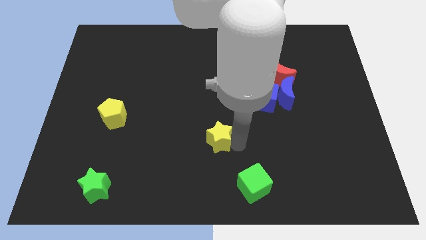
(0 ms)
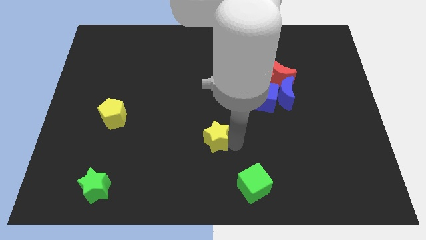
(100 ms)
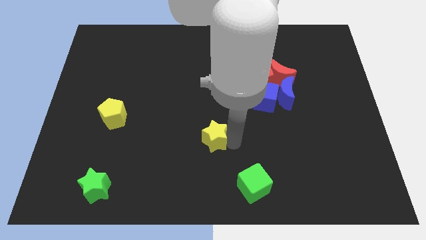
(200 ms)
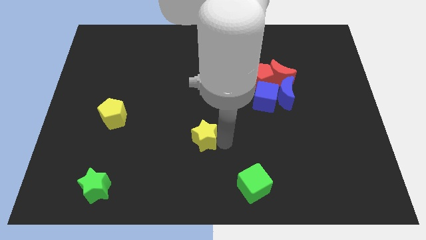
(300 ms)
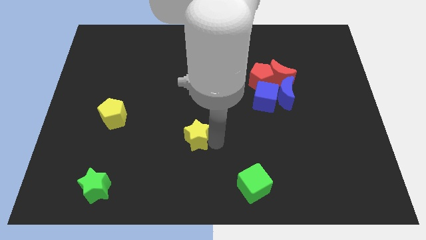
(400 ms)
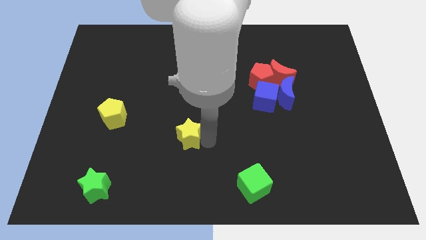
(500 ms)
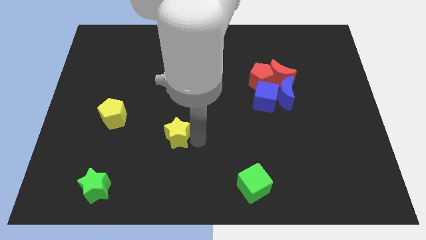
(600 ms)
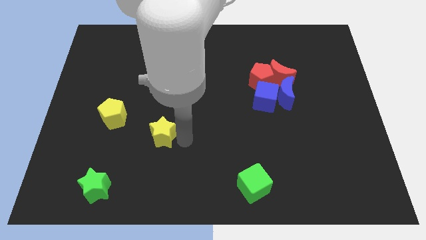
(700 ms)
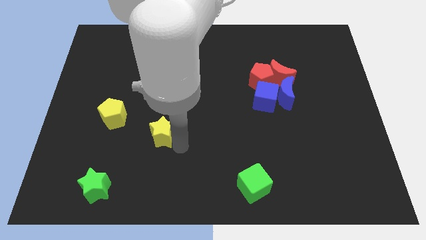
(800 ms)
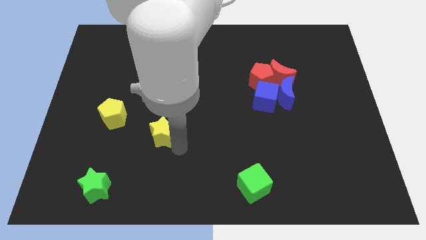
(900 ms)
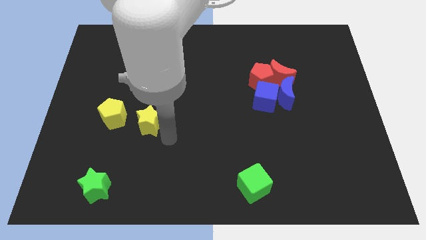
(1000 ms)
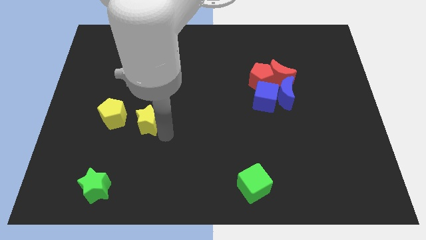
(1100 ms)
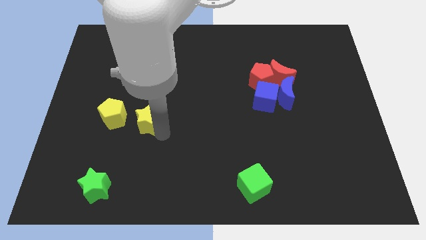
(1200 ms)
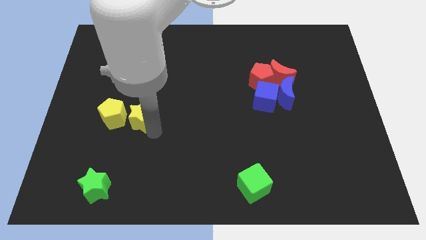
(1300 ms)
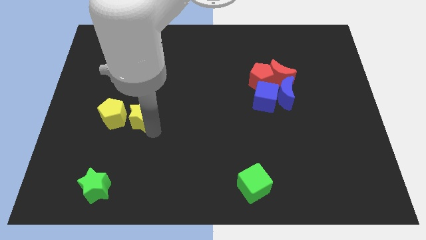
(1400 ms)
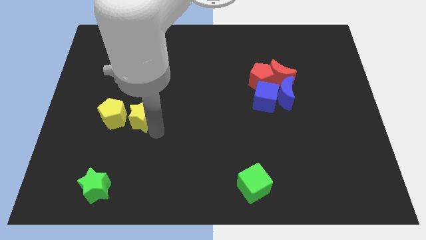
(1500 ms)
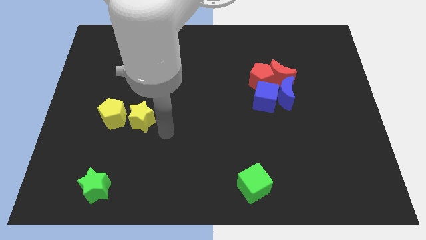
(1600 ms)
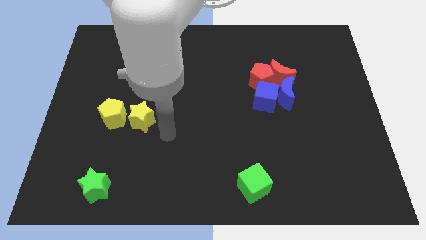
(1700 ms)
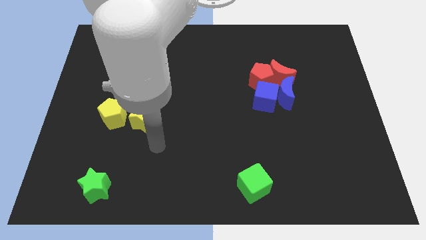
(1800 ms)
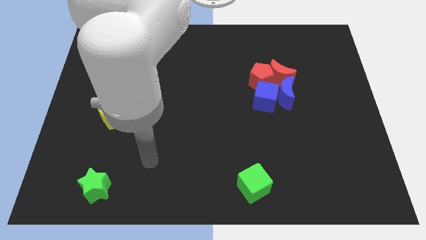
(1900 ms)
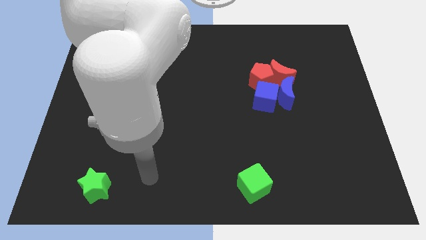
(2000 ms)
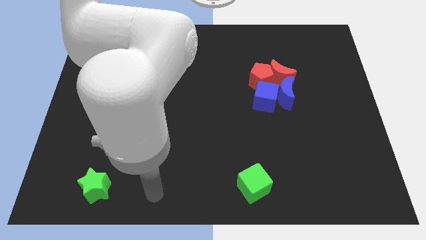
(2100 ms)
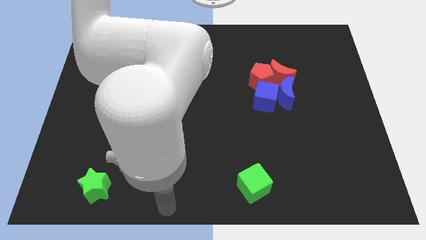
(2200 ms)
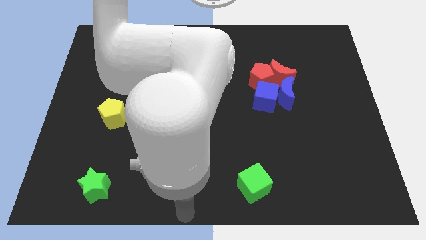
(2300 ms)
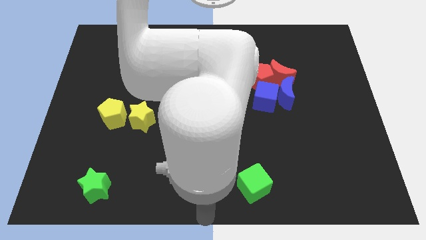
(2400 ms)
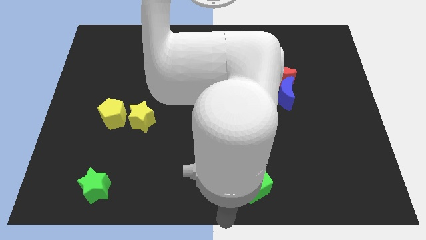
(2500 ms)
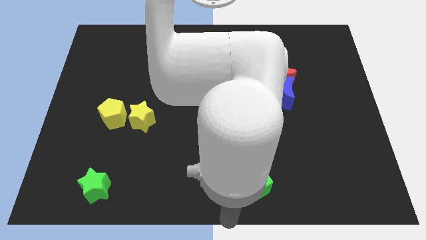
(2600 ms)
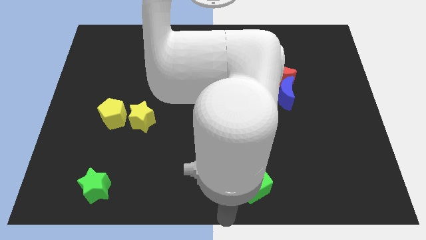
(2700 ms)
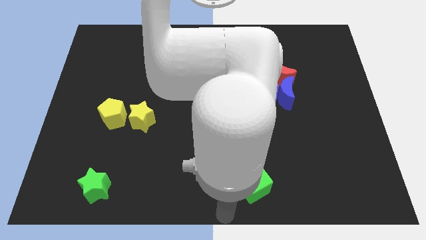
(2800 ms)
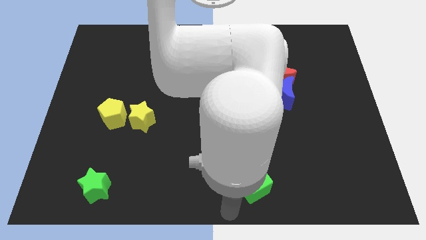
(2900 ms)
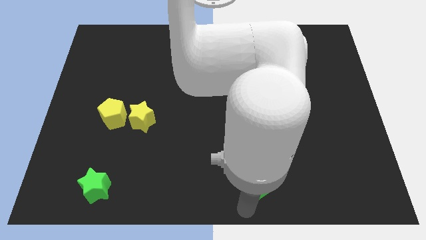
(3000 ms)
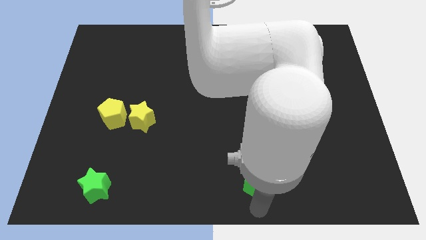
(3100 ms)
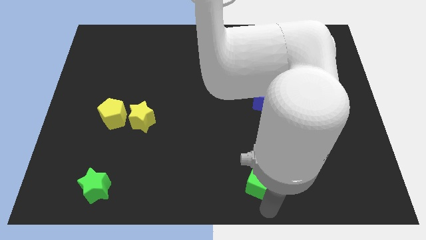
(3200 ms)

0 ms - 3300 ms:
place the yellow star right to the yellow pentagon

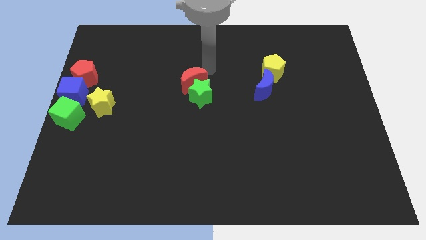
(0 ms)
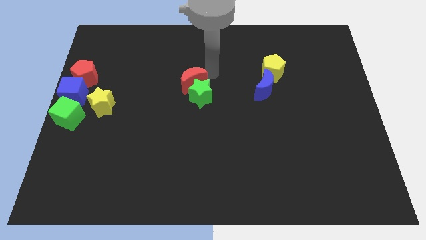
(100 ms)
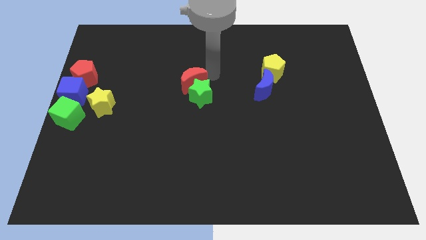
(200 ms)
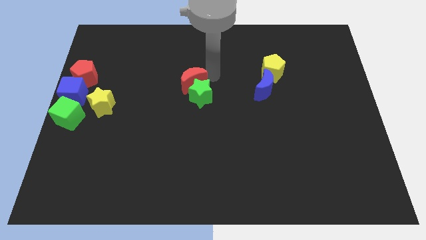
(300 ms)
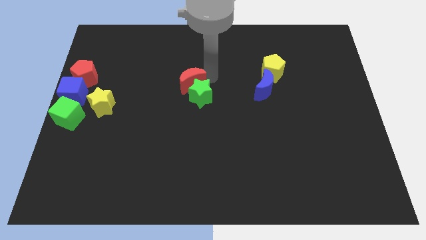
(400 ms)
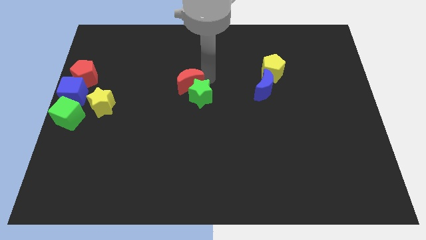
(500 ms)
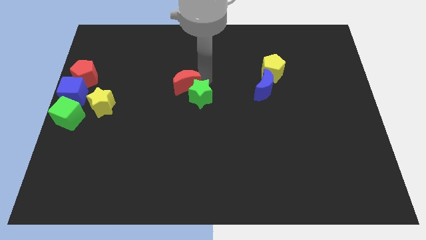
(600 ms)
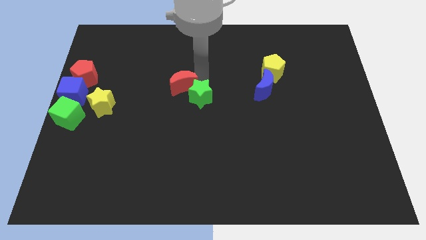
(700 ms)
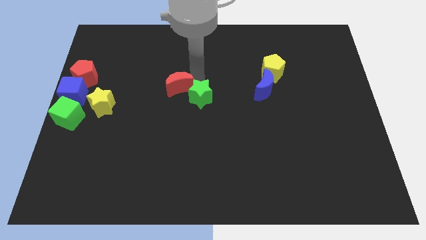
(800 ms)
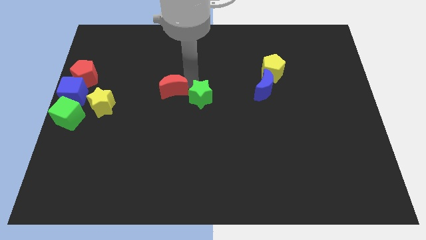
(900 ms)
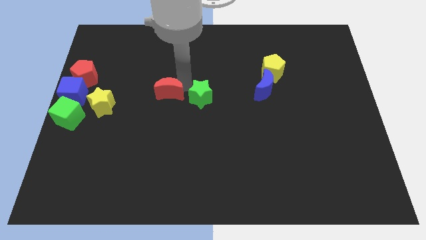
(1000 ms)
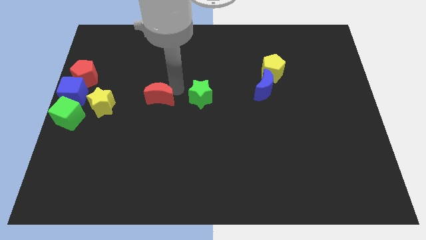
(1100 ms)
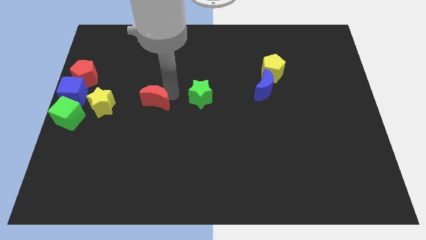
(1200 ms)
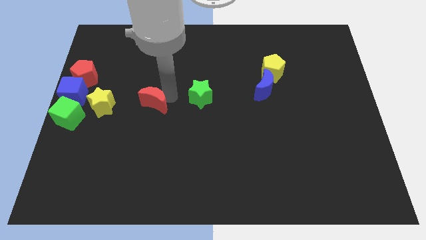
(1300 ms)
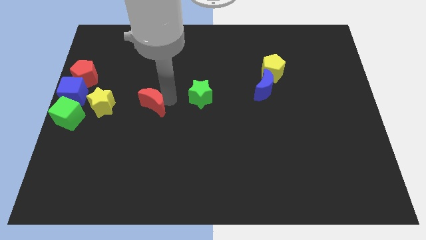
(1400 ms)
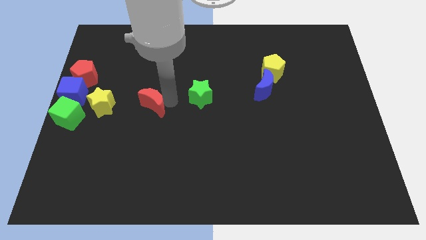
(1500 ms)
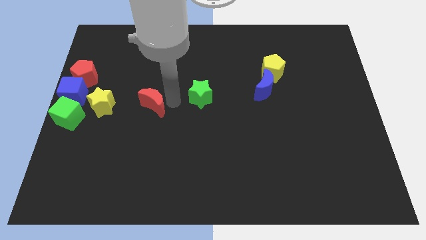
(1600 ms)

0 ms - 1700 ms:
put the red moon between the yellow star and green star

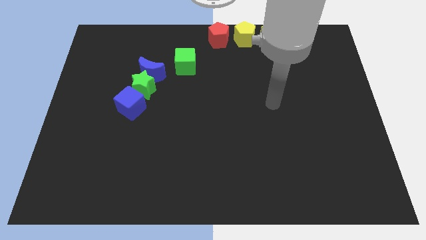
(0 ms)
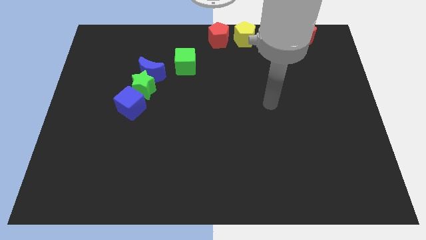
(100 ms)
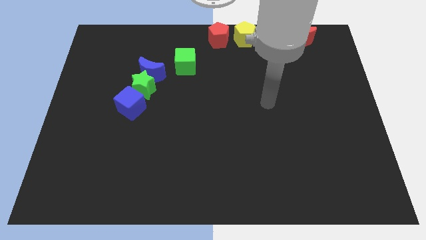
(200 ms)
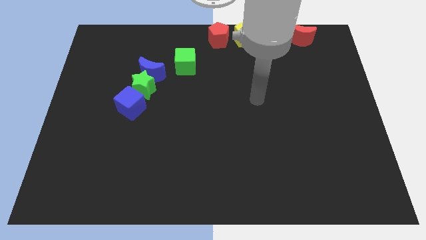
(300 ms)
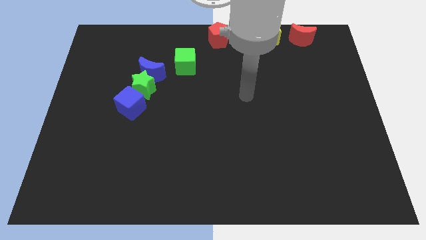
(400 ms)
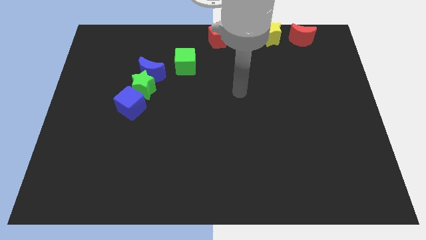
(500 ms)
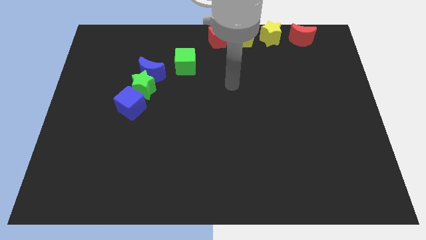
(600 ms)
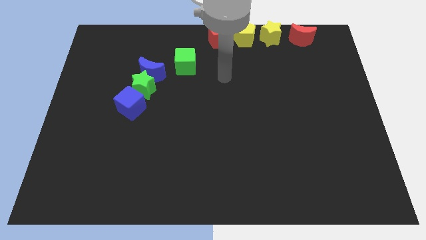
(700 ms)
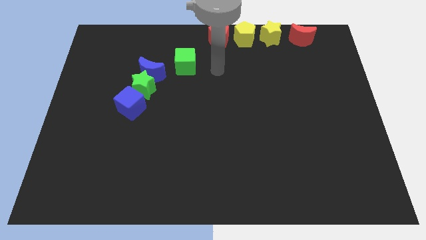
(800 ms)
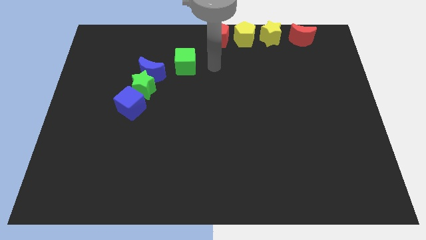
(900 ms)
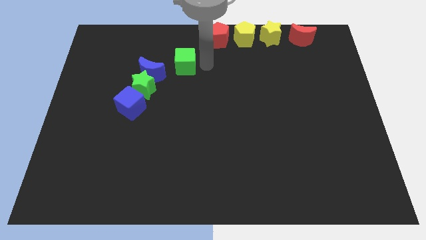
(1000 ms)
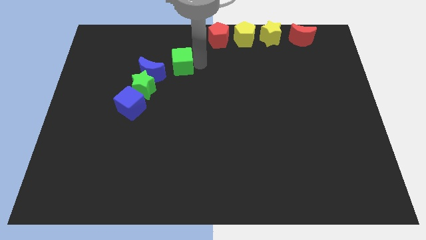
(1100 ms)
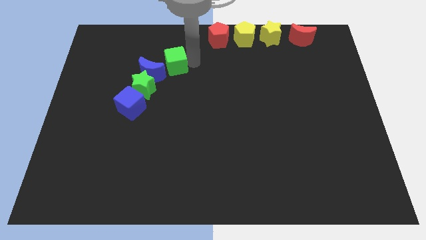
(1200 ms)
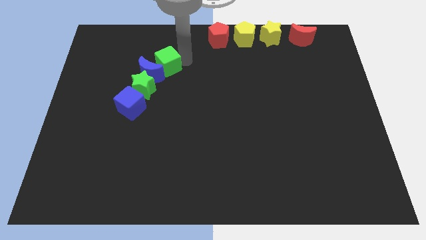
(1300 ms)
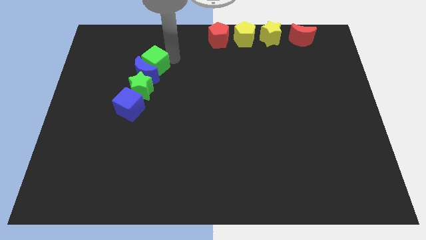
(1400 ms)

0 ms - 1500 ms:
push the green cube into blue crescent

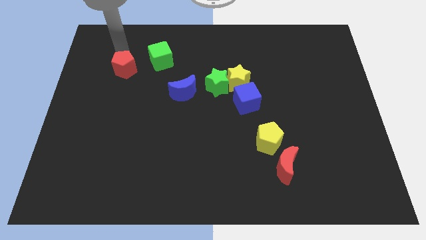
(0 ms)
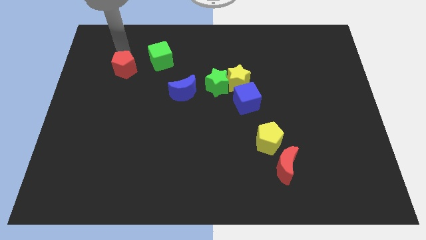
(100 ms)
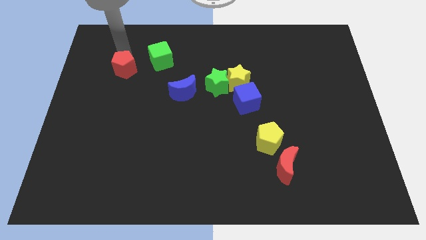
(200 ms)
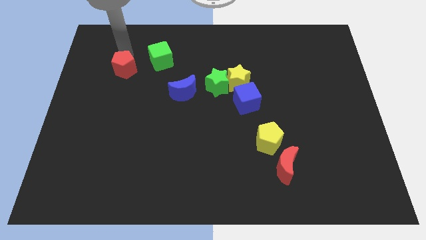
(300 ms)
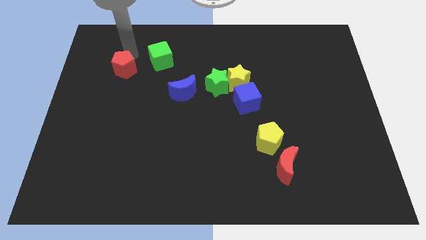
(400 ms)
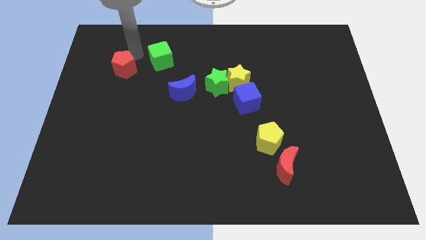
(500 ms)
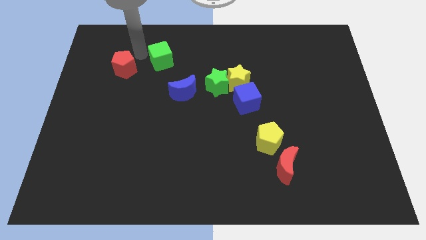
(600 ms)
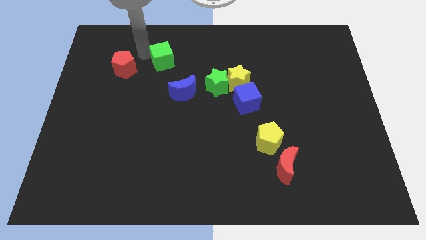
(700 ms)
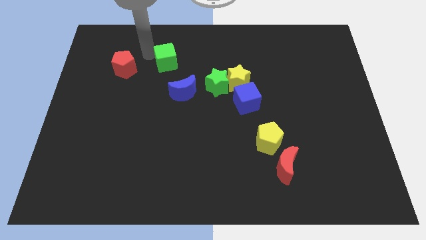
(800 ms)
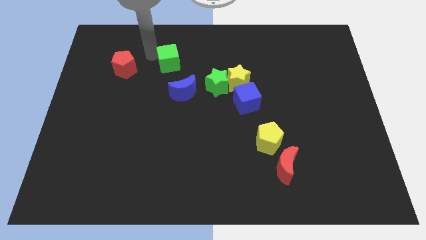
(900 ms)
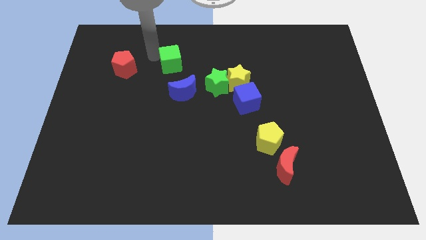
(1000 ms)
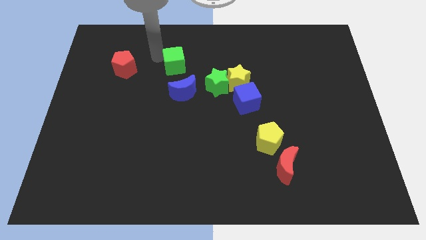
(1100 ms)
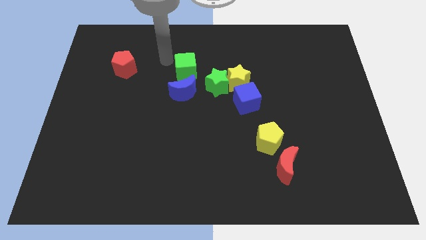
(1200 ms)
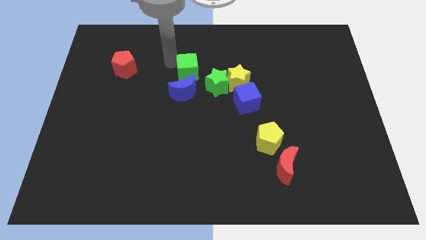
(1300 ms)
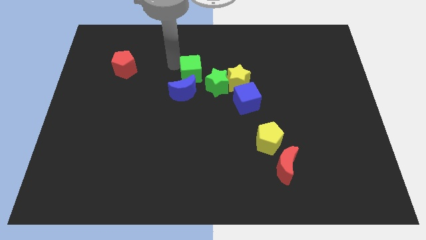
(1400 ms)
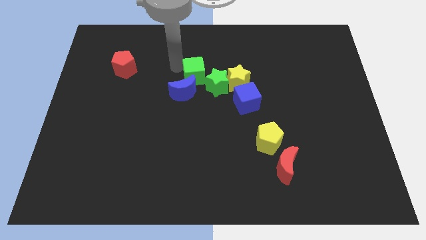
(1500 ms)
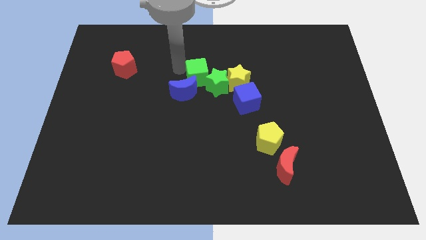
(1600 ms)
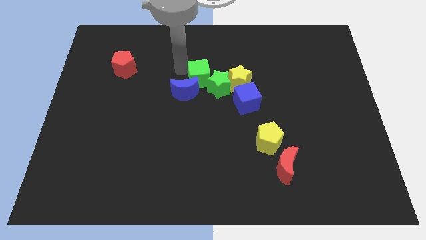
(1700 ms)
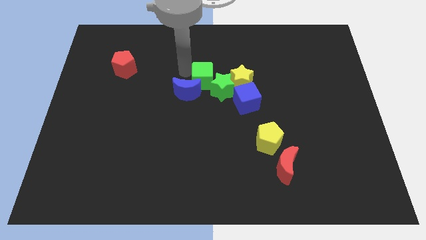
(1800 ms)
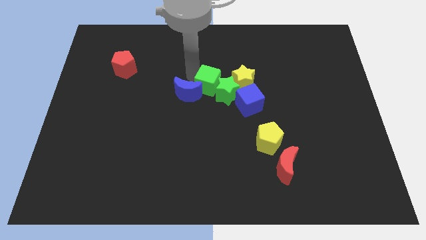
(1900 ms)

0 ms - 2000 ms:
push the green cube into the green star

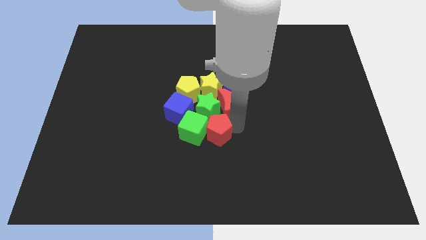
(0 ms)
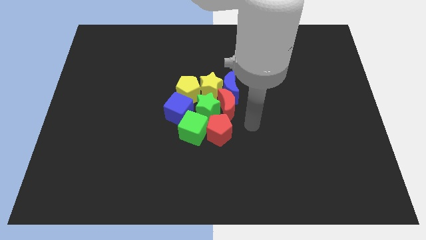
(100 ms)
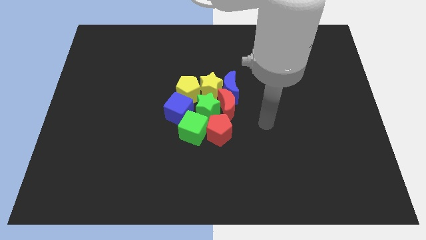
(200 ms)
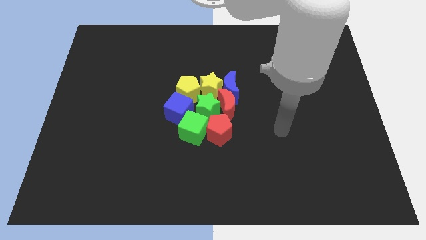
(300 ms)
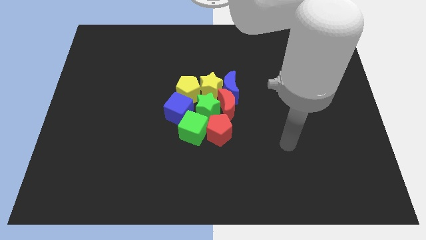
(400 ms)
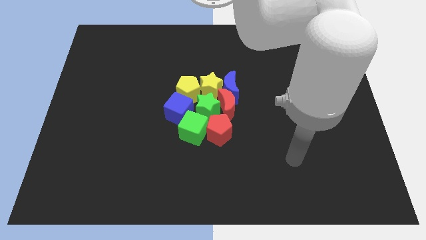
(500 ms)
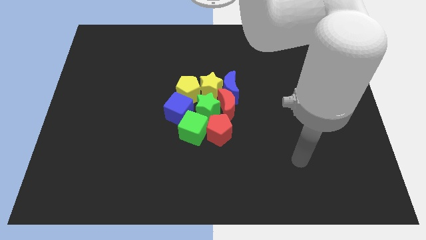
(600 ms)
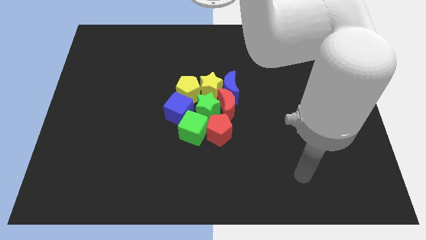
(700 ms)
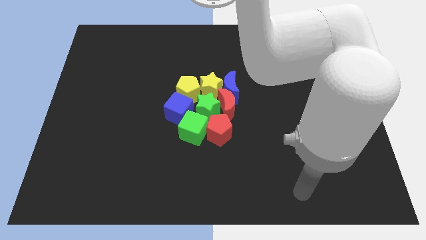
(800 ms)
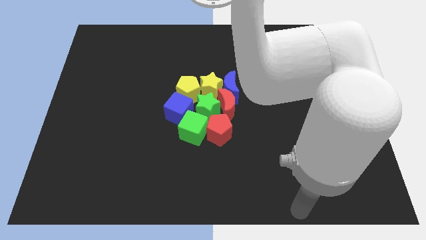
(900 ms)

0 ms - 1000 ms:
move your arm away from the red pentagon
